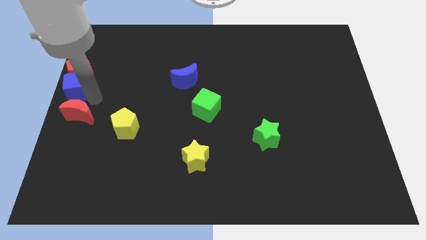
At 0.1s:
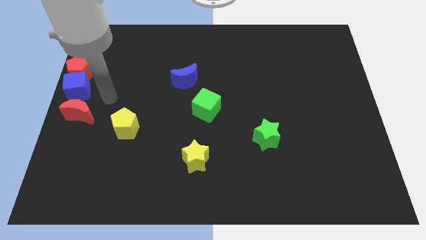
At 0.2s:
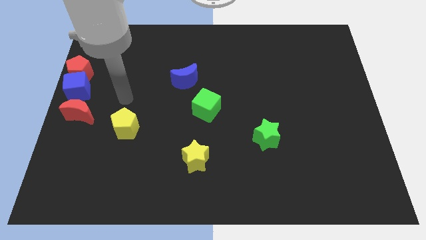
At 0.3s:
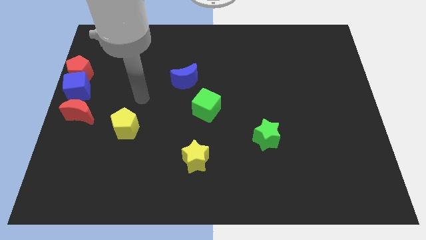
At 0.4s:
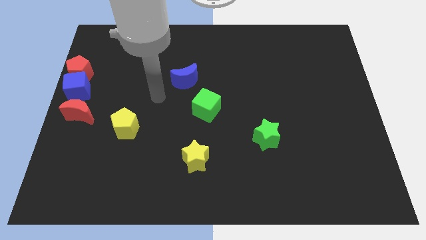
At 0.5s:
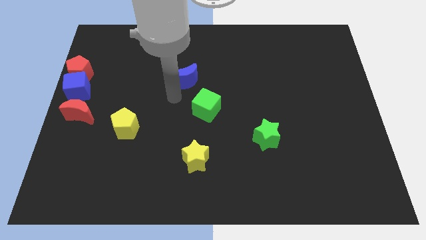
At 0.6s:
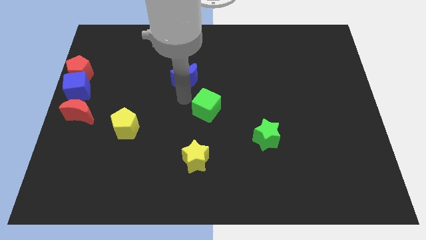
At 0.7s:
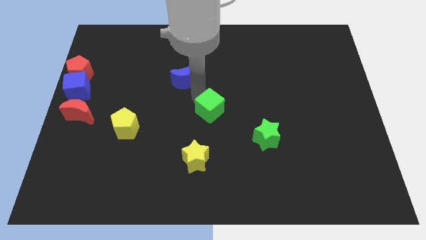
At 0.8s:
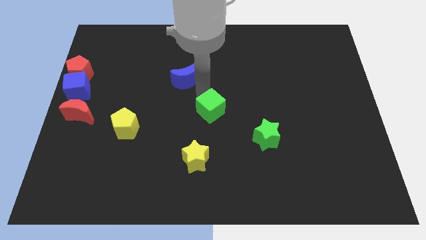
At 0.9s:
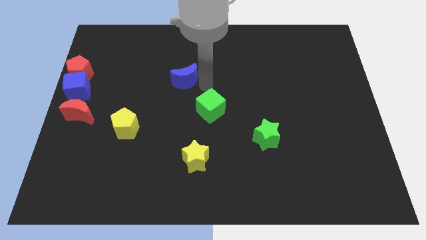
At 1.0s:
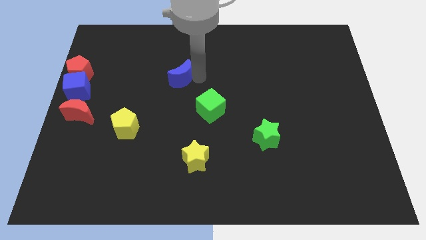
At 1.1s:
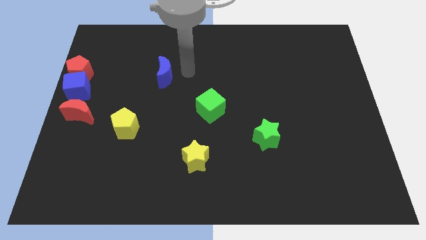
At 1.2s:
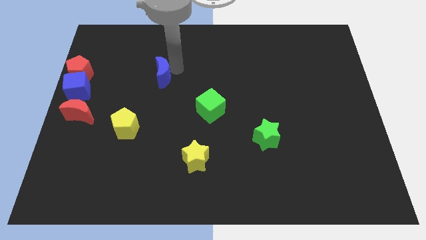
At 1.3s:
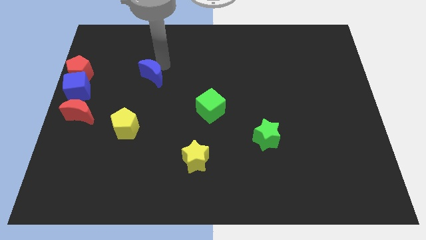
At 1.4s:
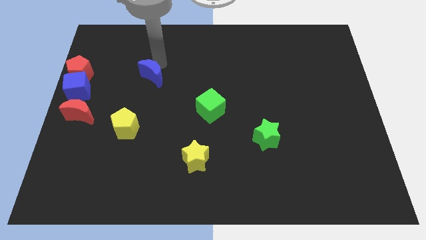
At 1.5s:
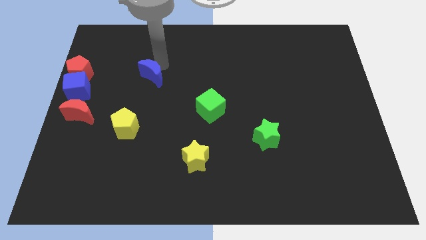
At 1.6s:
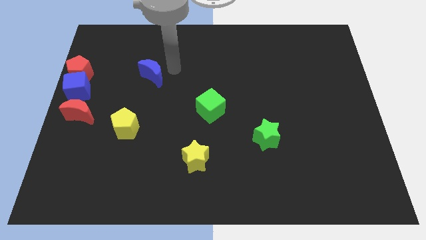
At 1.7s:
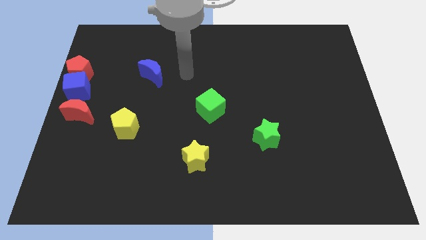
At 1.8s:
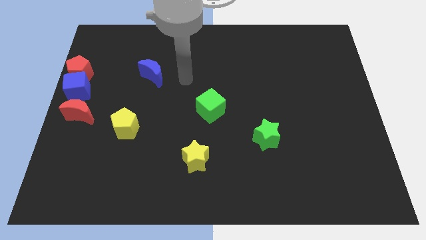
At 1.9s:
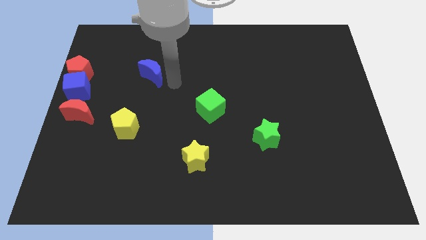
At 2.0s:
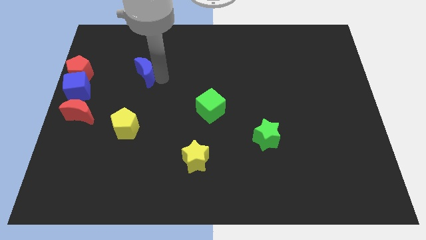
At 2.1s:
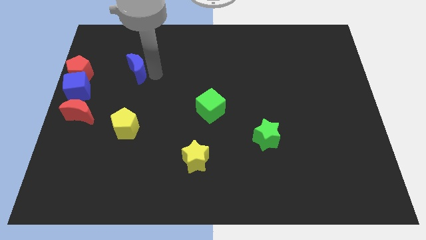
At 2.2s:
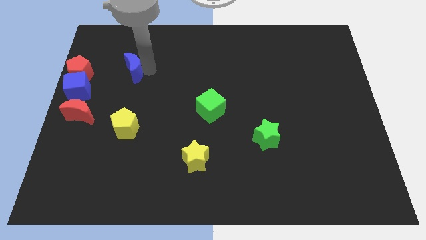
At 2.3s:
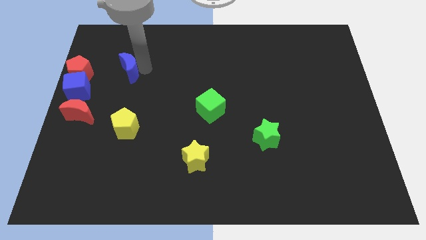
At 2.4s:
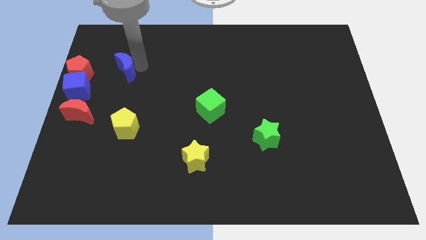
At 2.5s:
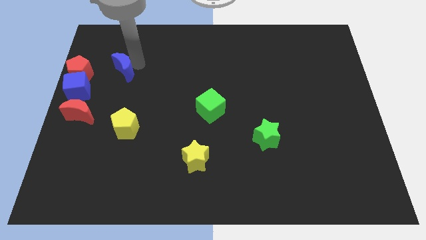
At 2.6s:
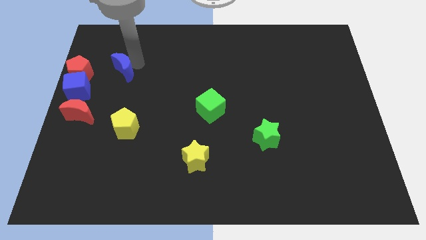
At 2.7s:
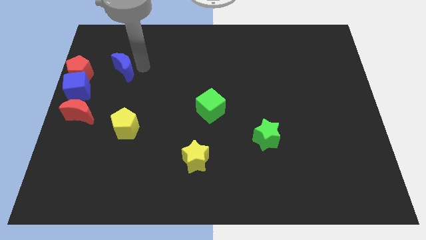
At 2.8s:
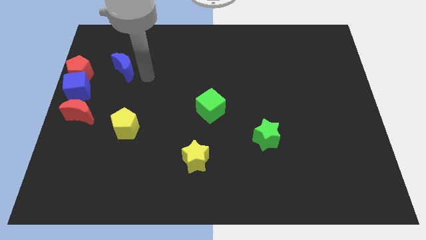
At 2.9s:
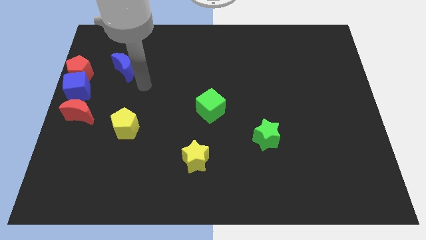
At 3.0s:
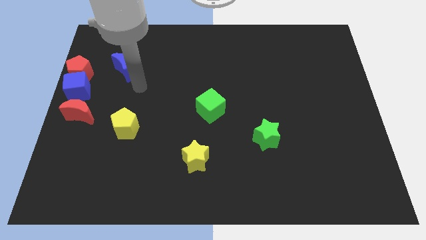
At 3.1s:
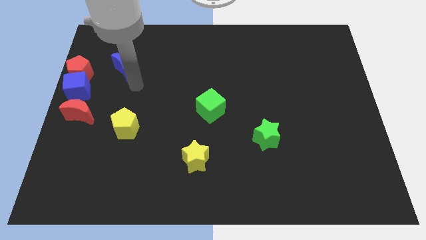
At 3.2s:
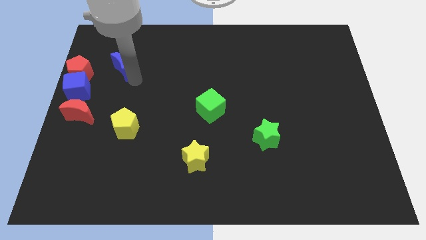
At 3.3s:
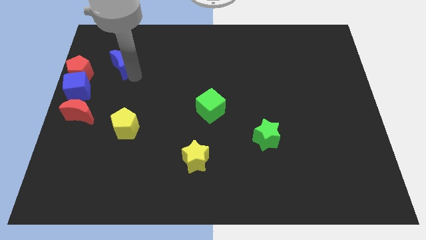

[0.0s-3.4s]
move the blue moon vertically to the top of the yellow pentagon

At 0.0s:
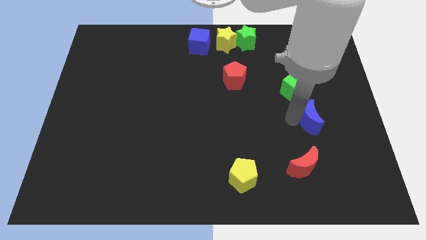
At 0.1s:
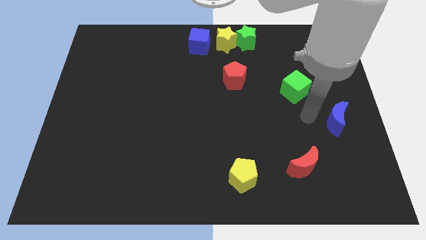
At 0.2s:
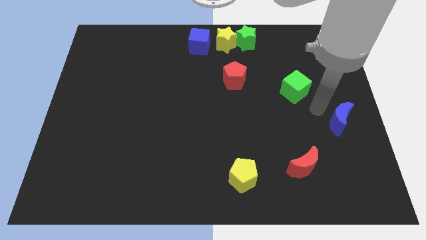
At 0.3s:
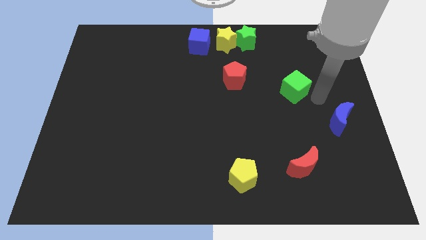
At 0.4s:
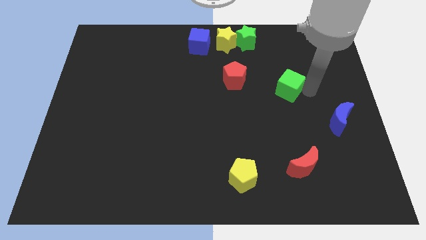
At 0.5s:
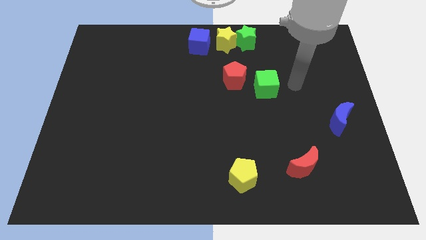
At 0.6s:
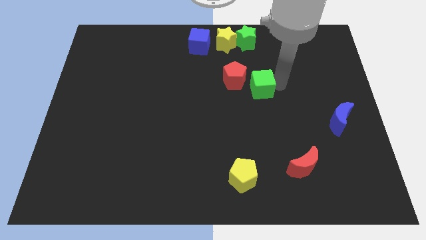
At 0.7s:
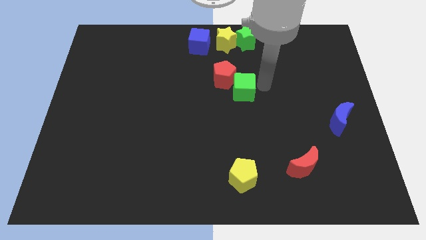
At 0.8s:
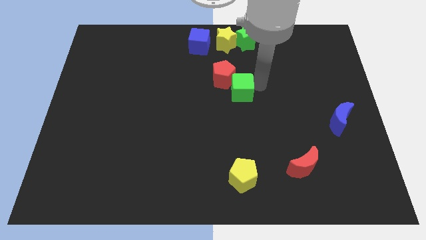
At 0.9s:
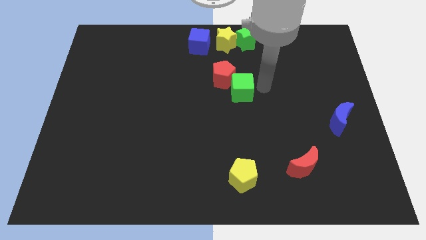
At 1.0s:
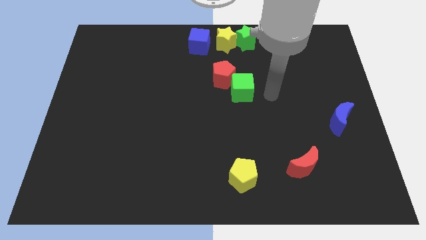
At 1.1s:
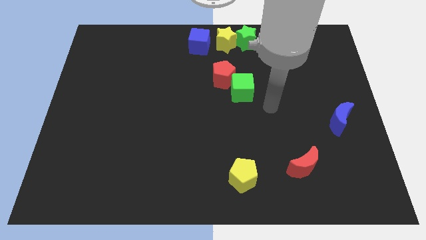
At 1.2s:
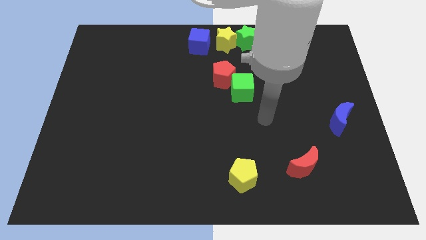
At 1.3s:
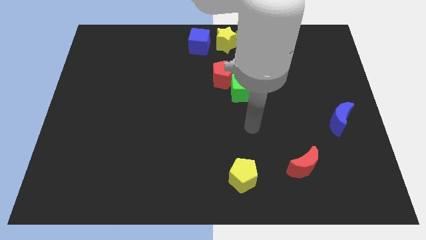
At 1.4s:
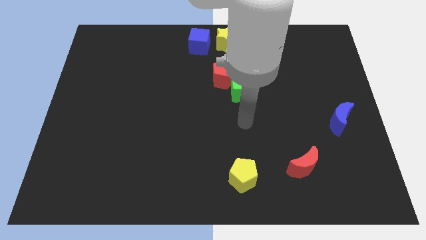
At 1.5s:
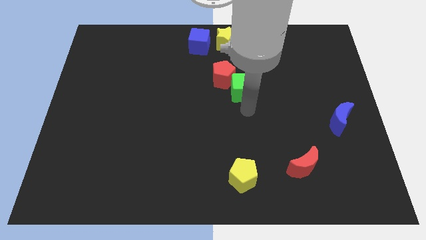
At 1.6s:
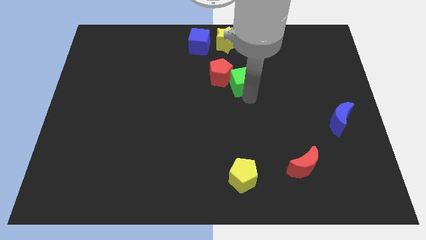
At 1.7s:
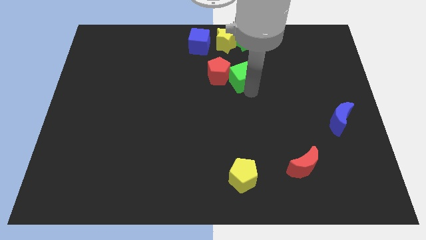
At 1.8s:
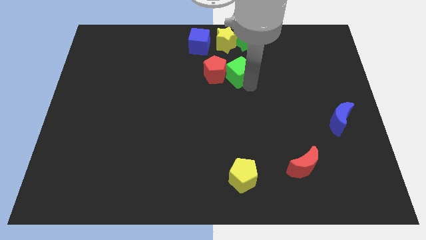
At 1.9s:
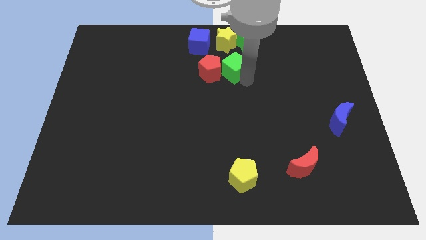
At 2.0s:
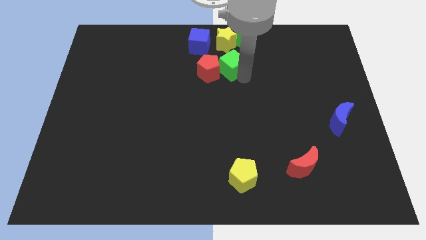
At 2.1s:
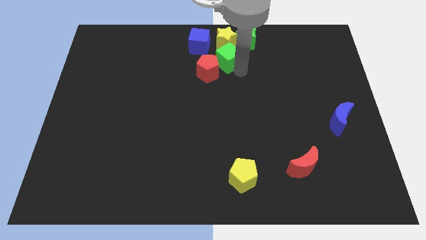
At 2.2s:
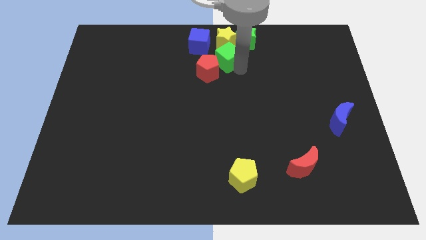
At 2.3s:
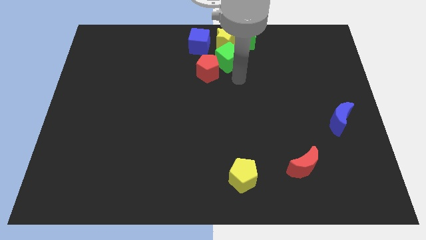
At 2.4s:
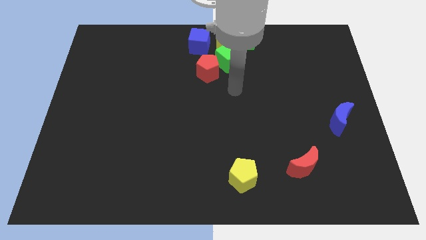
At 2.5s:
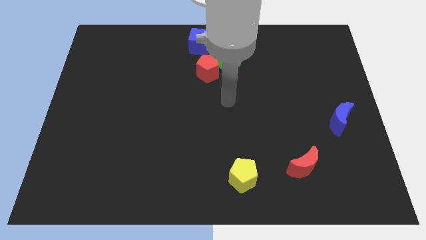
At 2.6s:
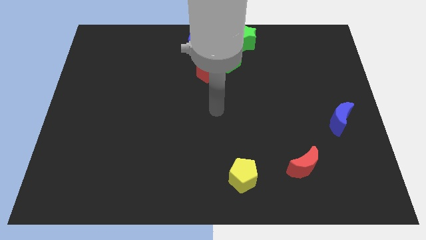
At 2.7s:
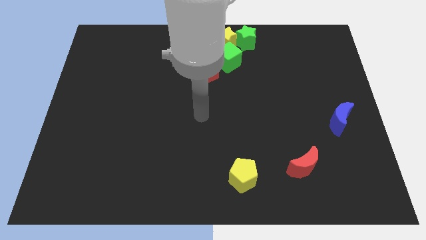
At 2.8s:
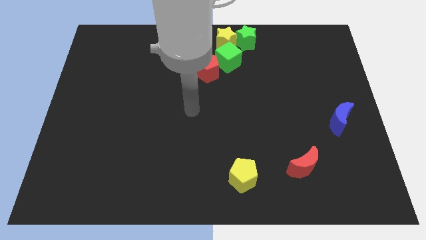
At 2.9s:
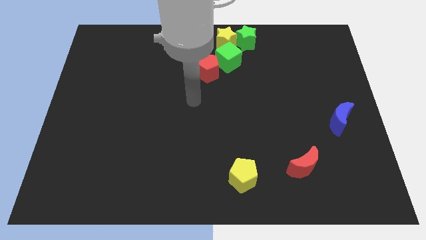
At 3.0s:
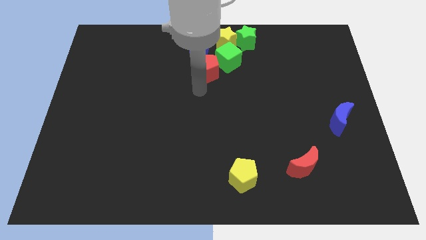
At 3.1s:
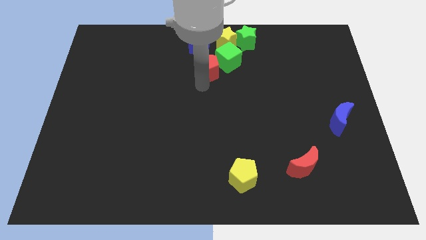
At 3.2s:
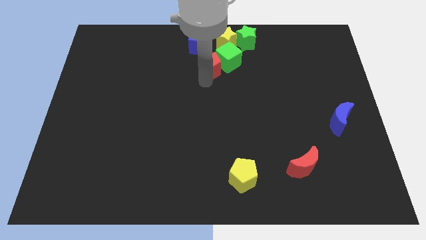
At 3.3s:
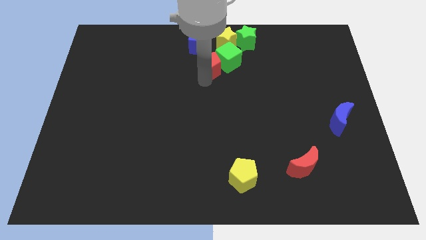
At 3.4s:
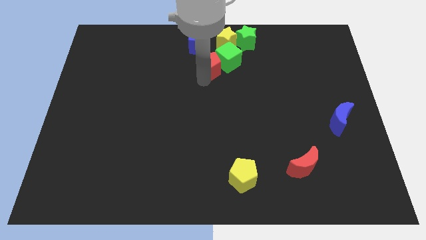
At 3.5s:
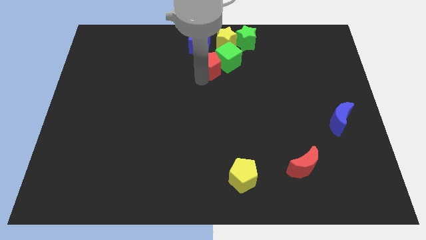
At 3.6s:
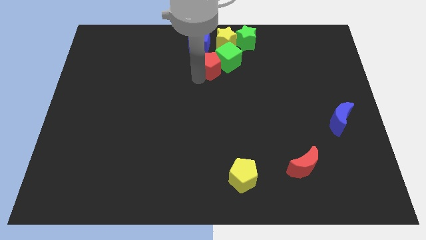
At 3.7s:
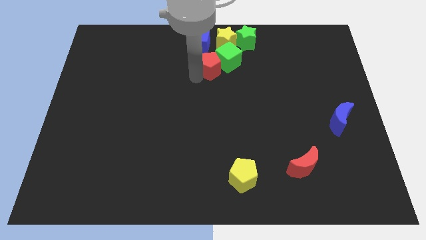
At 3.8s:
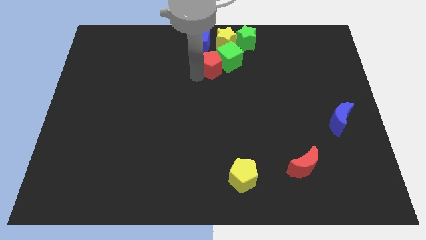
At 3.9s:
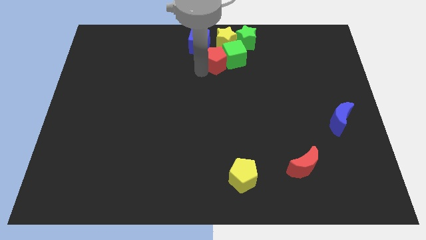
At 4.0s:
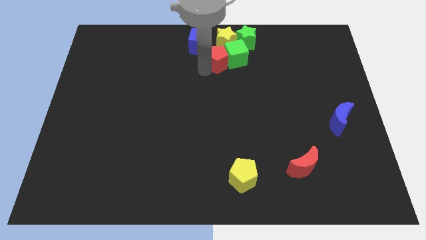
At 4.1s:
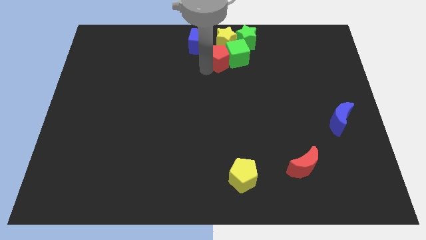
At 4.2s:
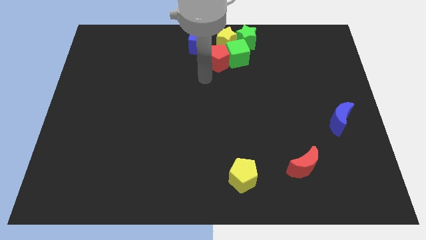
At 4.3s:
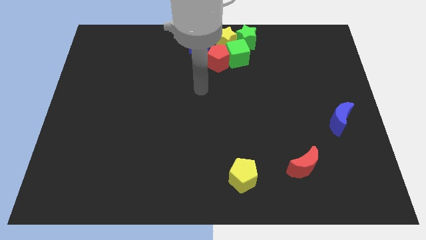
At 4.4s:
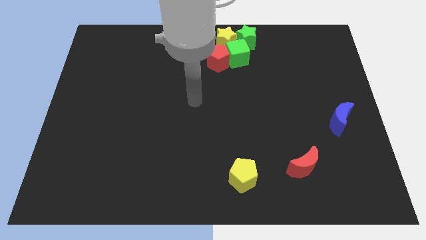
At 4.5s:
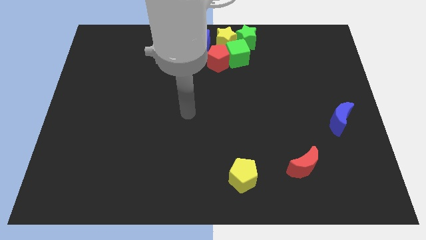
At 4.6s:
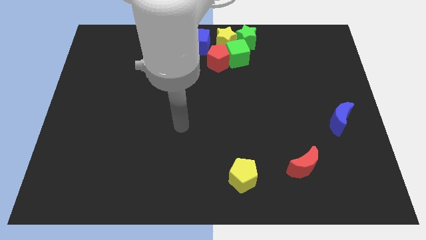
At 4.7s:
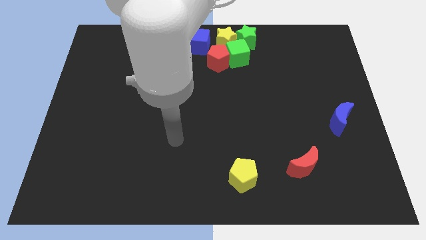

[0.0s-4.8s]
move green cube and red pentagon into bottom of the yellow star

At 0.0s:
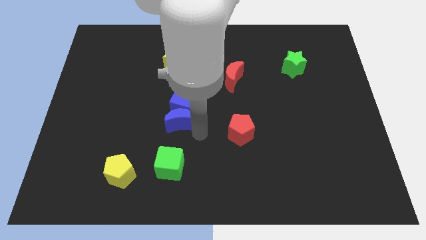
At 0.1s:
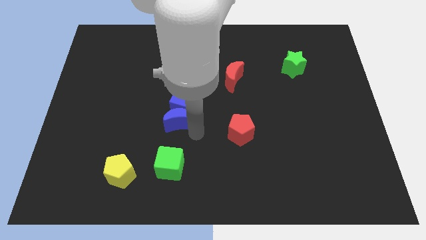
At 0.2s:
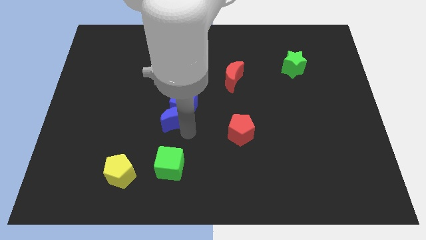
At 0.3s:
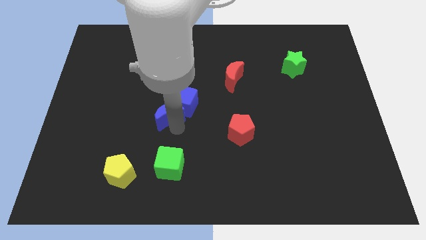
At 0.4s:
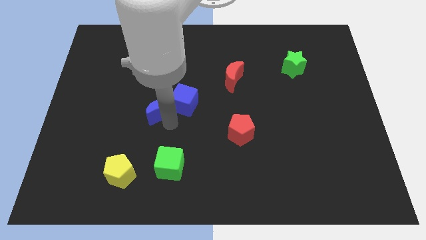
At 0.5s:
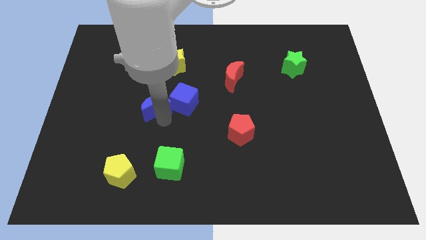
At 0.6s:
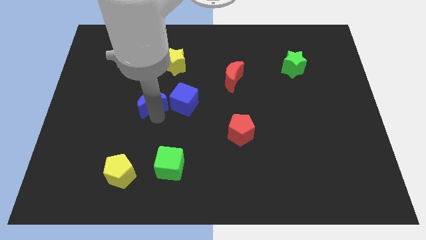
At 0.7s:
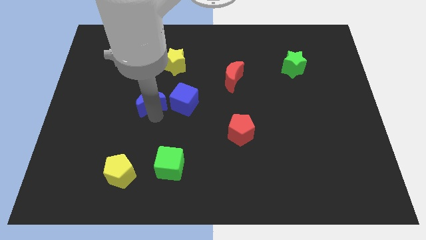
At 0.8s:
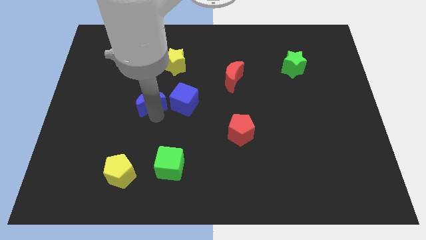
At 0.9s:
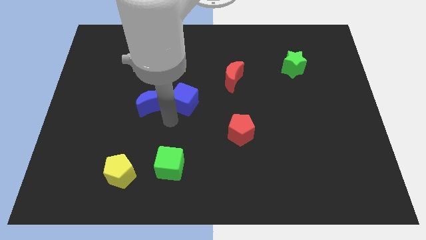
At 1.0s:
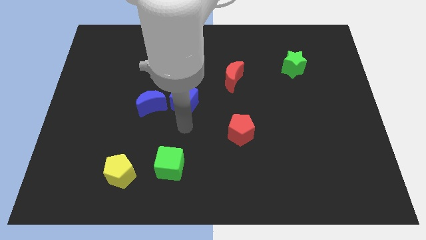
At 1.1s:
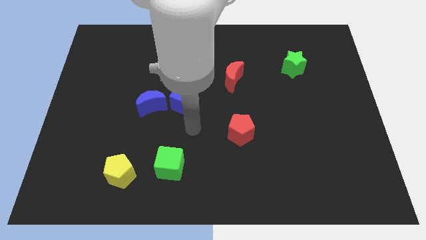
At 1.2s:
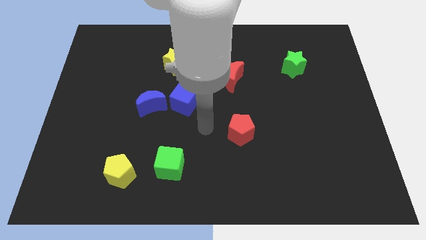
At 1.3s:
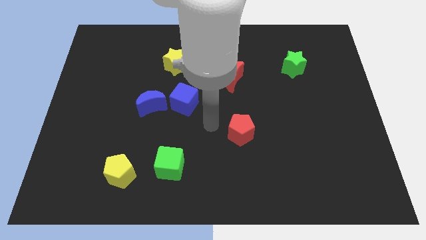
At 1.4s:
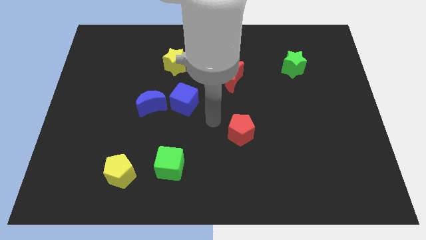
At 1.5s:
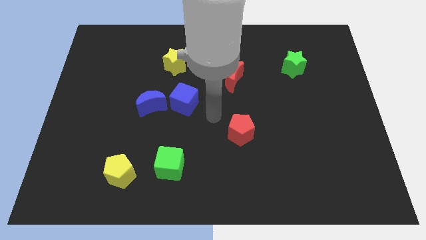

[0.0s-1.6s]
move the blue moon to the left of blue cube
